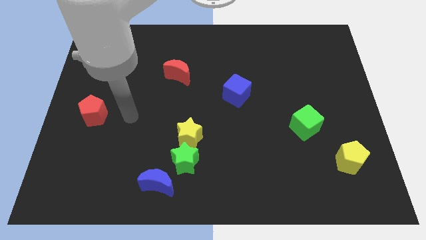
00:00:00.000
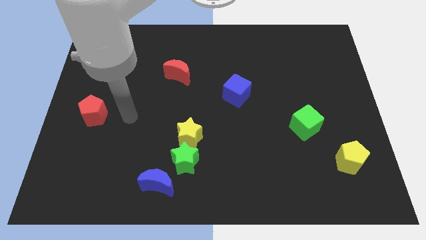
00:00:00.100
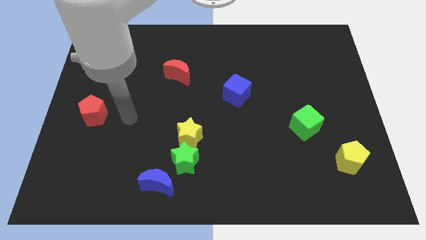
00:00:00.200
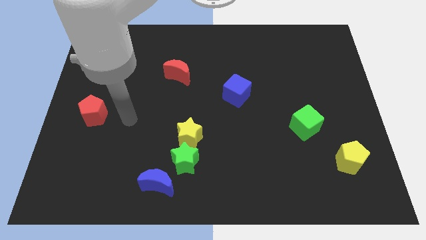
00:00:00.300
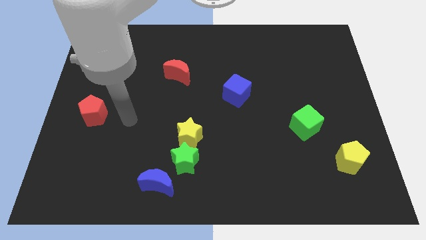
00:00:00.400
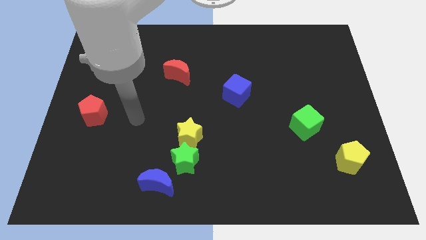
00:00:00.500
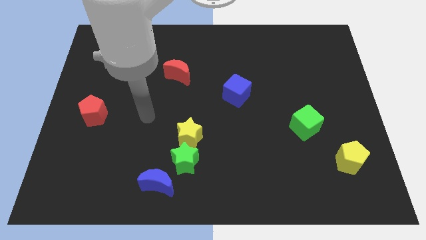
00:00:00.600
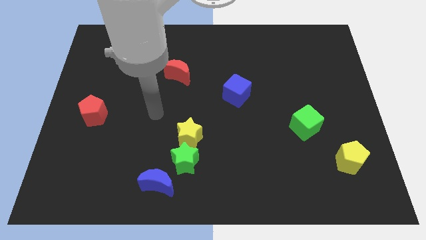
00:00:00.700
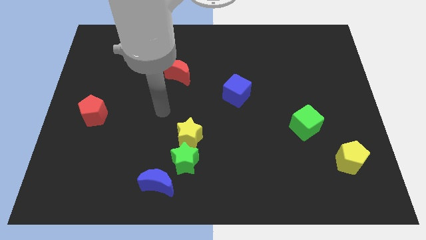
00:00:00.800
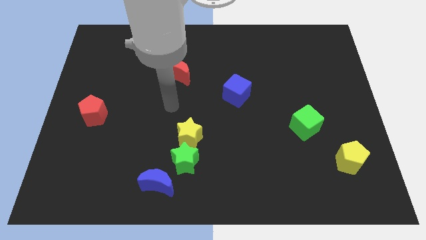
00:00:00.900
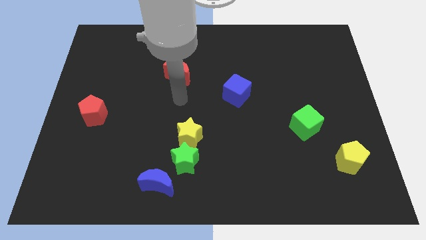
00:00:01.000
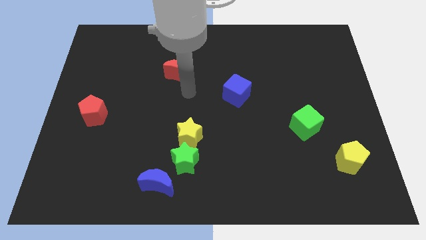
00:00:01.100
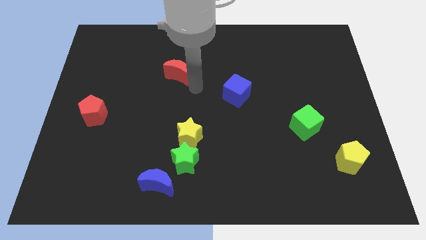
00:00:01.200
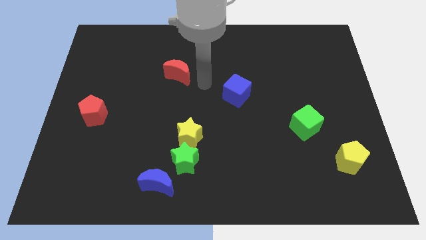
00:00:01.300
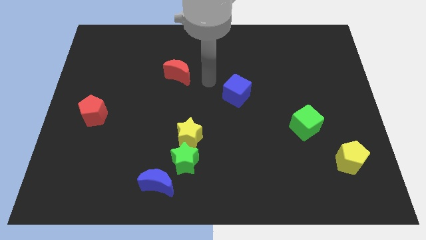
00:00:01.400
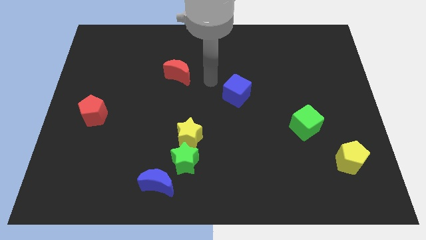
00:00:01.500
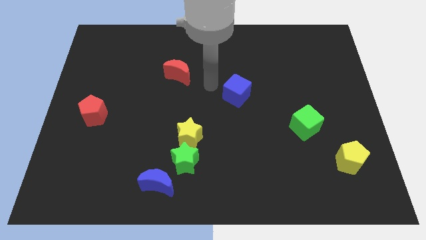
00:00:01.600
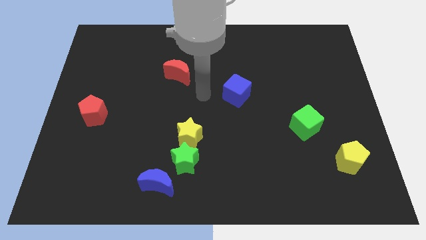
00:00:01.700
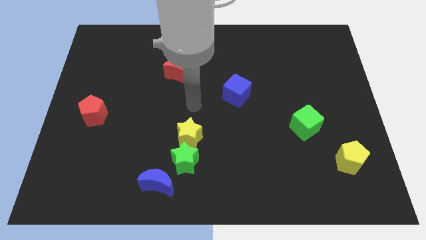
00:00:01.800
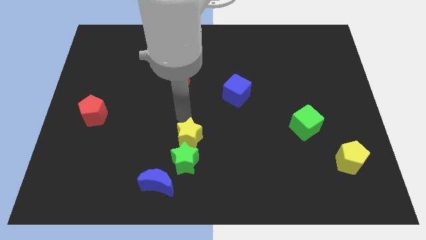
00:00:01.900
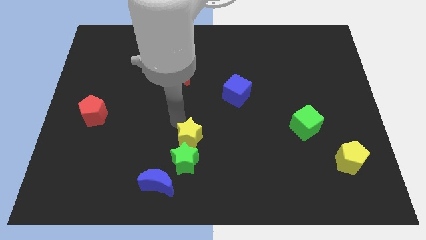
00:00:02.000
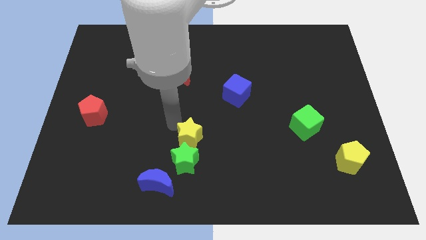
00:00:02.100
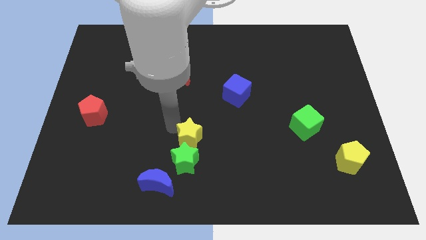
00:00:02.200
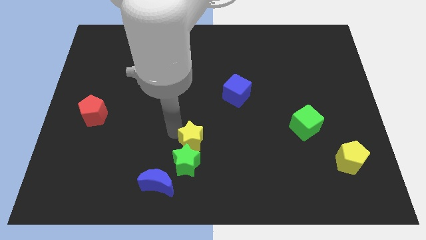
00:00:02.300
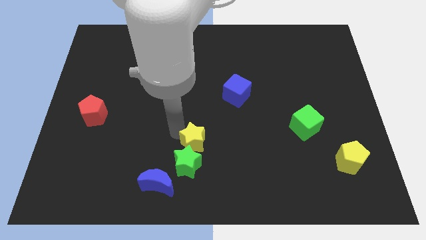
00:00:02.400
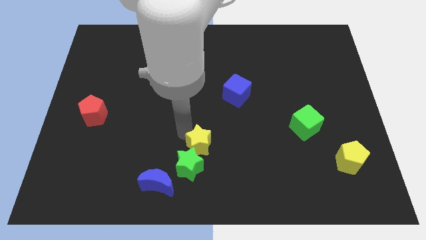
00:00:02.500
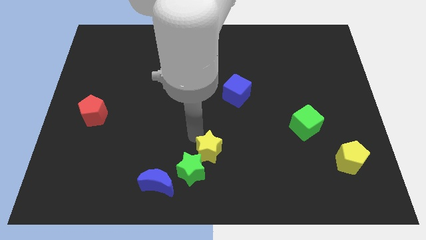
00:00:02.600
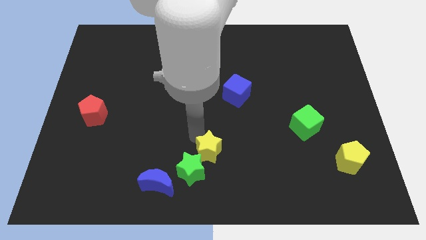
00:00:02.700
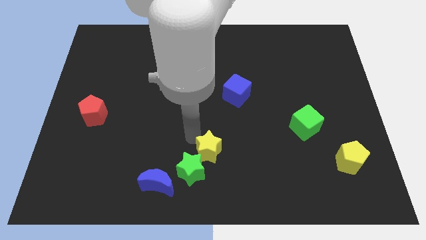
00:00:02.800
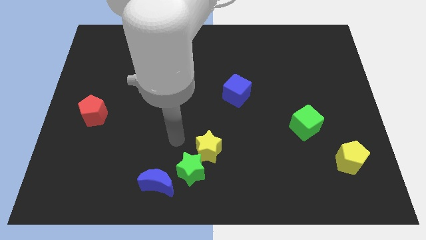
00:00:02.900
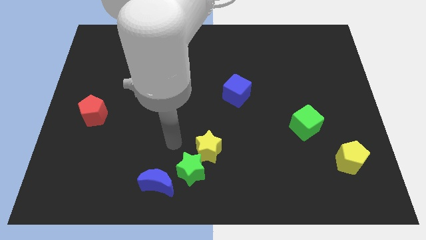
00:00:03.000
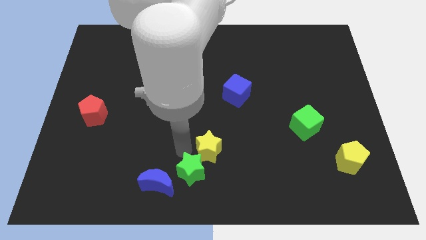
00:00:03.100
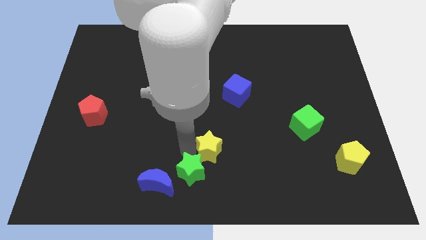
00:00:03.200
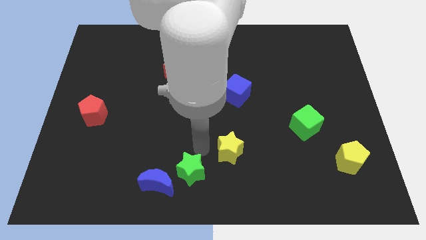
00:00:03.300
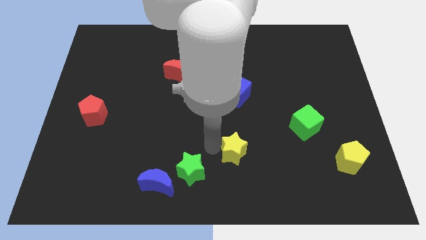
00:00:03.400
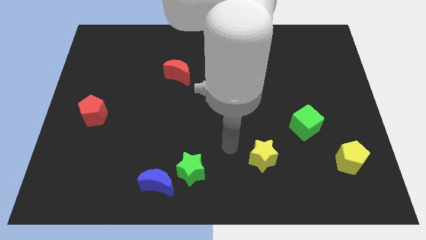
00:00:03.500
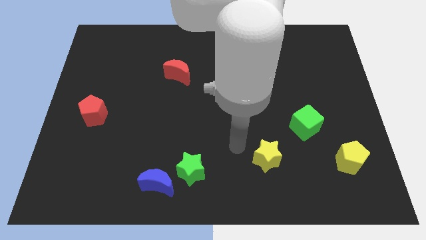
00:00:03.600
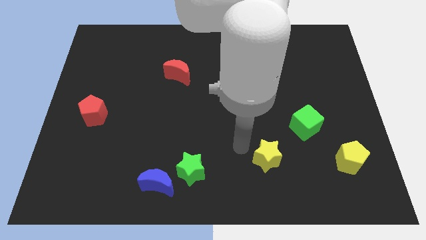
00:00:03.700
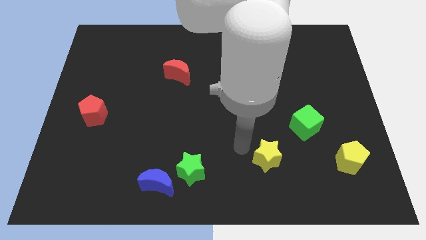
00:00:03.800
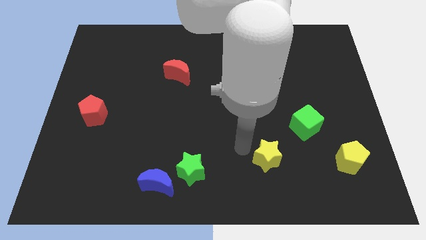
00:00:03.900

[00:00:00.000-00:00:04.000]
move the yellow star away from the green star

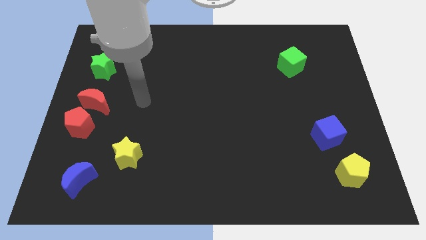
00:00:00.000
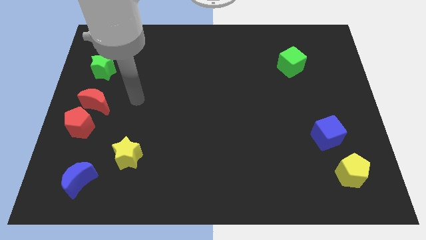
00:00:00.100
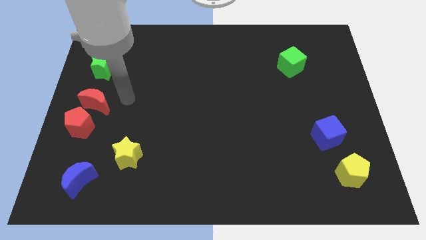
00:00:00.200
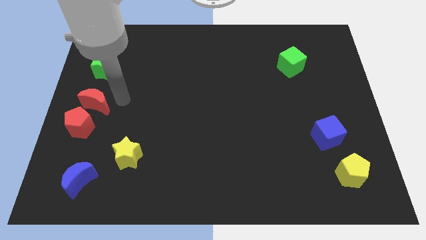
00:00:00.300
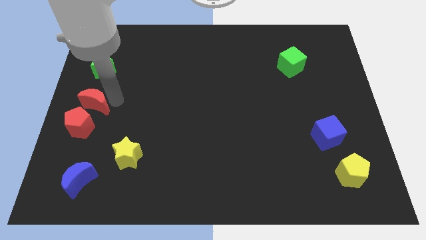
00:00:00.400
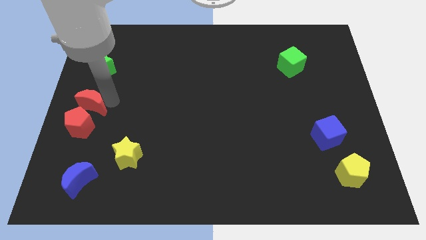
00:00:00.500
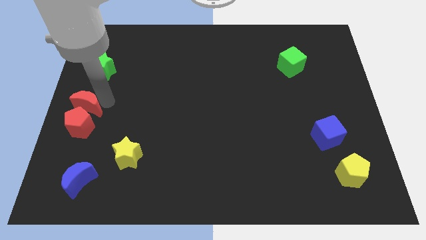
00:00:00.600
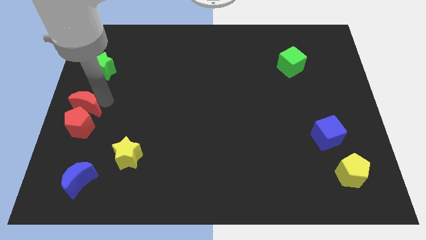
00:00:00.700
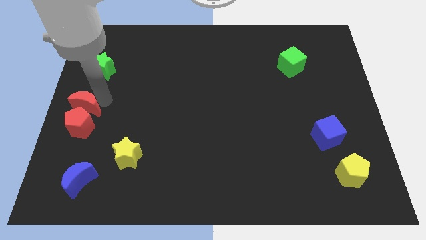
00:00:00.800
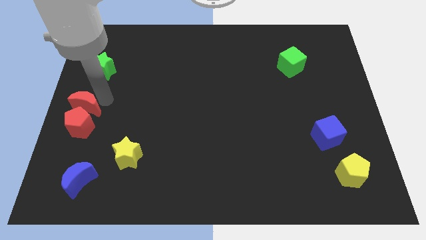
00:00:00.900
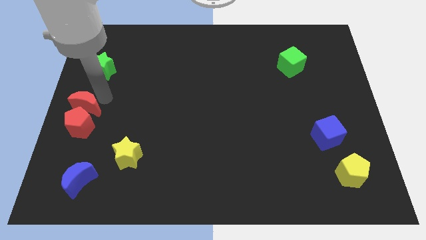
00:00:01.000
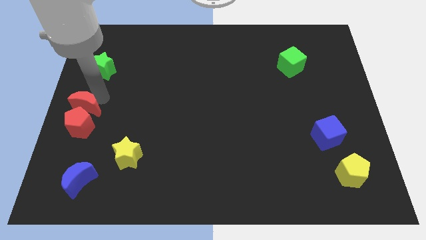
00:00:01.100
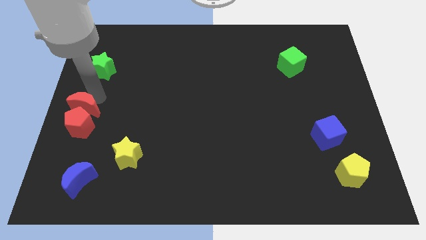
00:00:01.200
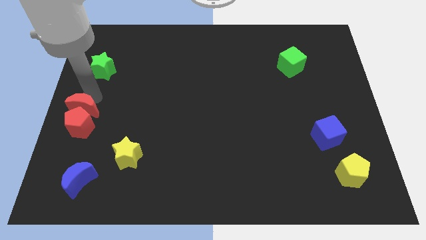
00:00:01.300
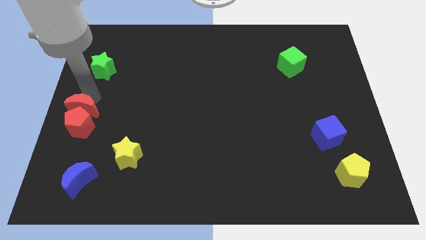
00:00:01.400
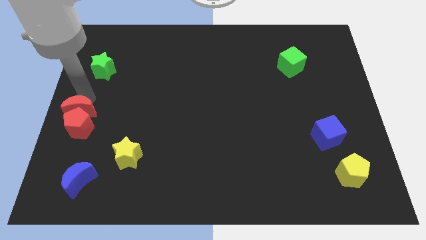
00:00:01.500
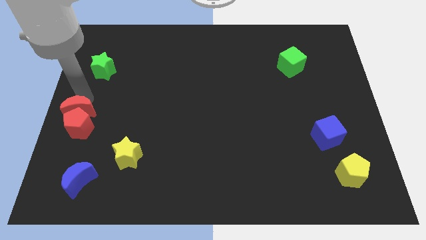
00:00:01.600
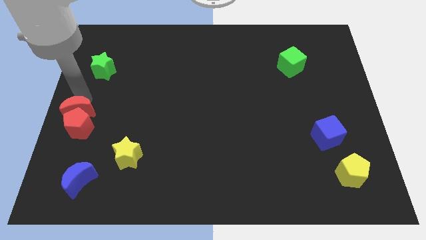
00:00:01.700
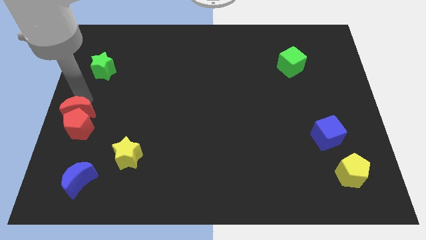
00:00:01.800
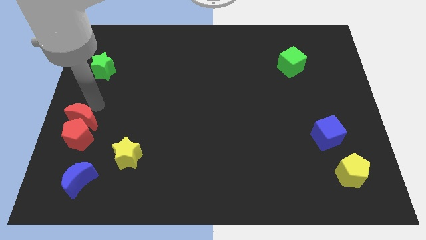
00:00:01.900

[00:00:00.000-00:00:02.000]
move red crescent into red pentagon

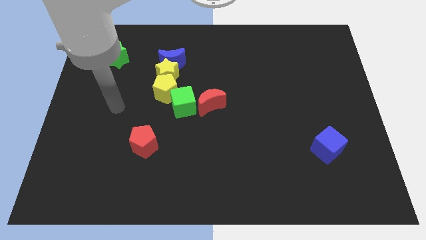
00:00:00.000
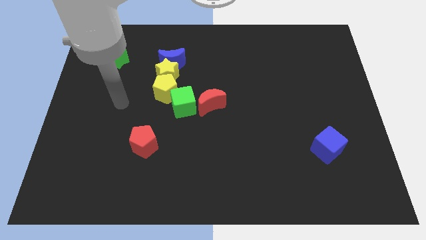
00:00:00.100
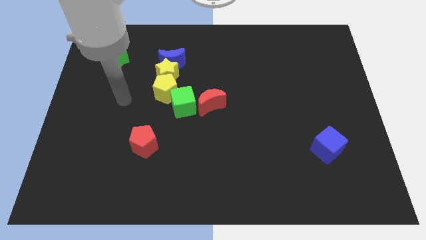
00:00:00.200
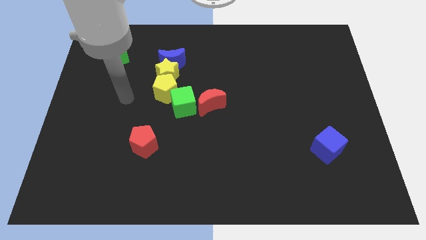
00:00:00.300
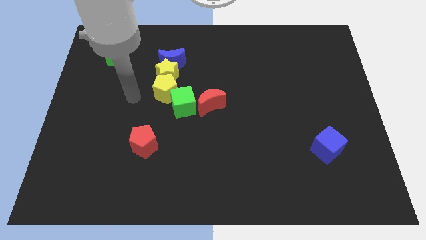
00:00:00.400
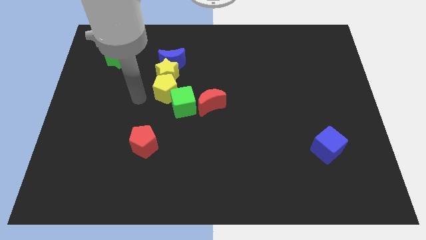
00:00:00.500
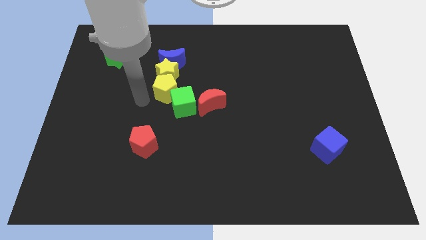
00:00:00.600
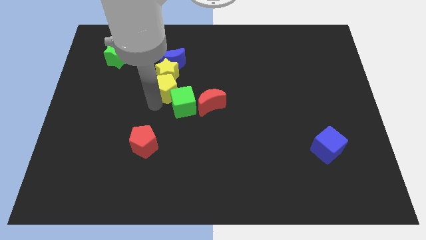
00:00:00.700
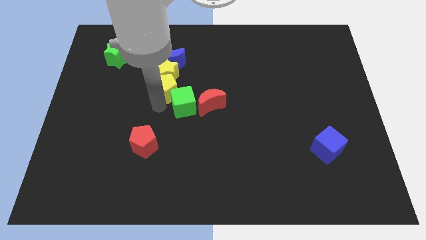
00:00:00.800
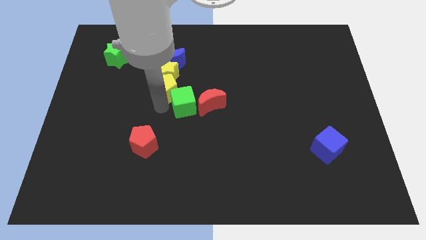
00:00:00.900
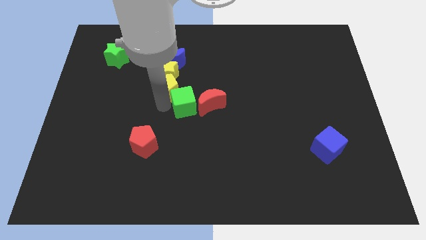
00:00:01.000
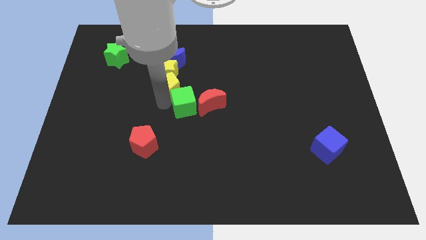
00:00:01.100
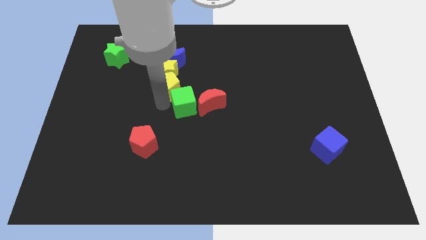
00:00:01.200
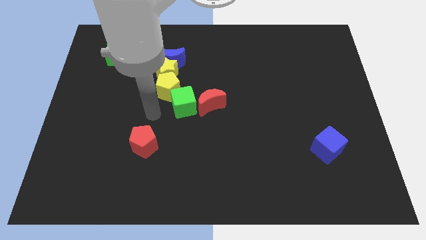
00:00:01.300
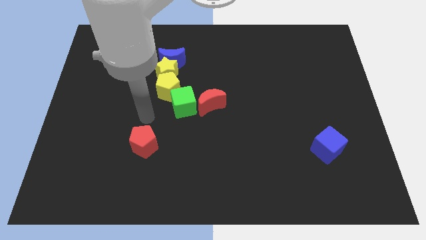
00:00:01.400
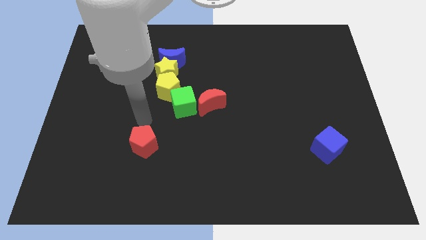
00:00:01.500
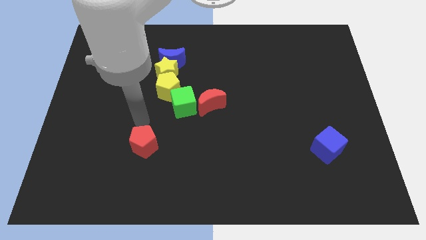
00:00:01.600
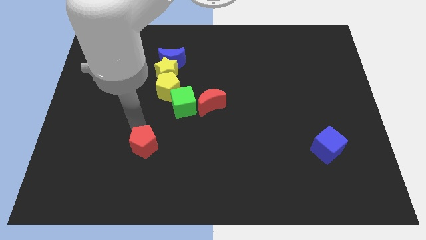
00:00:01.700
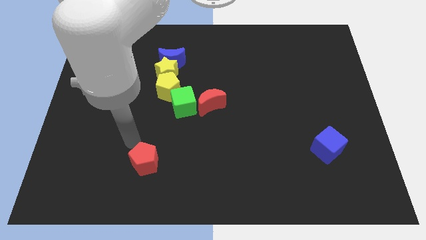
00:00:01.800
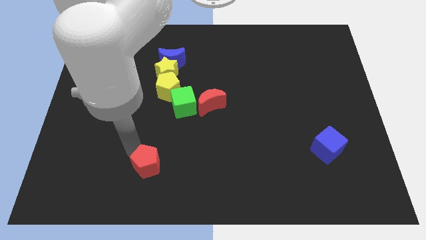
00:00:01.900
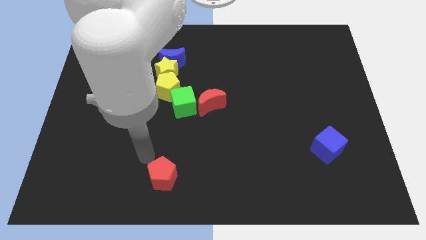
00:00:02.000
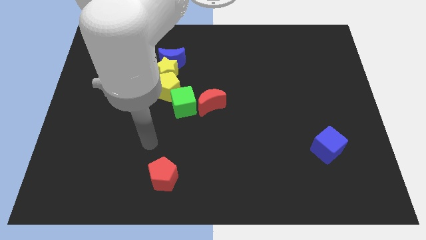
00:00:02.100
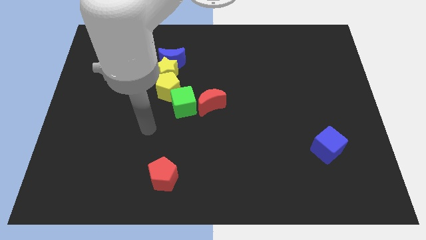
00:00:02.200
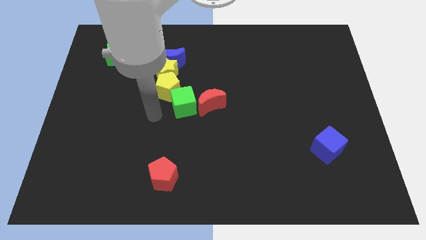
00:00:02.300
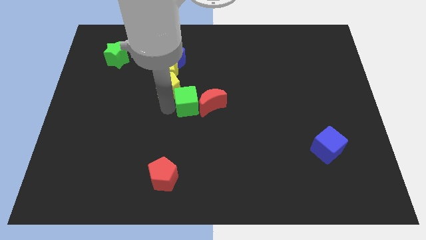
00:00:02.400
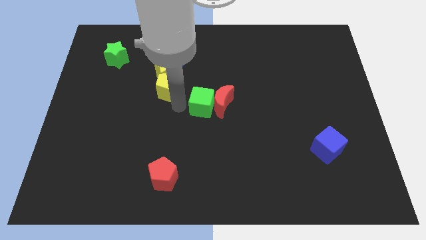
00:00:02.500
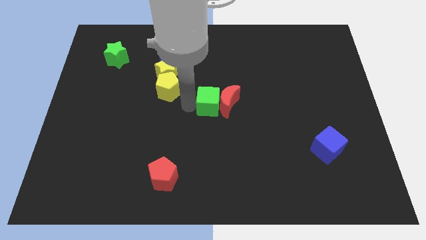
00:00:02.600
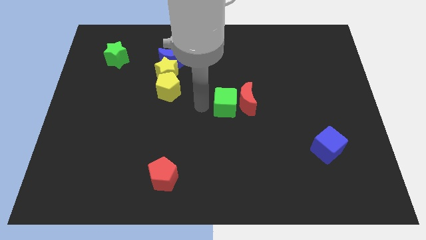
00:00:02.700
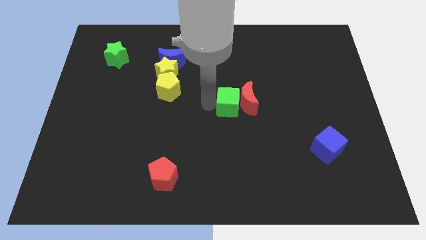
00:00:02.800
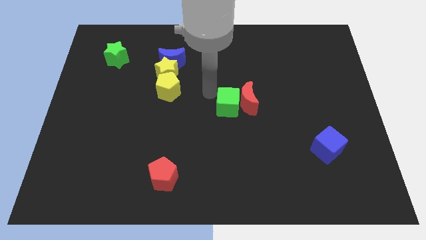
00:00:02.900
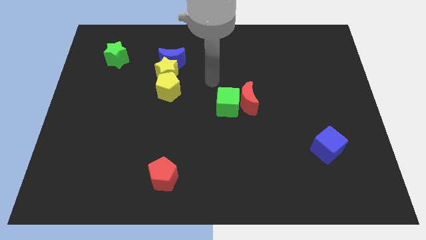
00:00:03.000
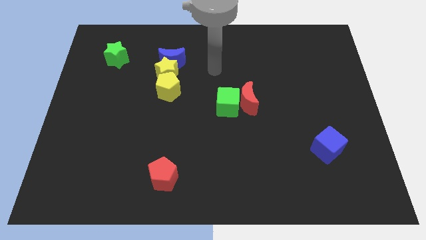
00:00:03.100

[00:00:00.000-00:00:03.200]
push the green cube to the center of the board
